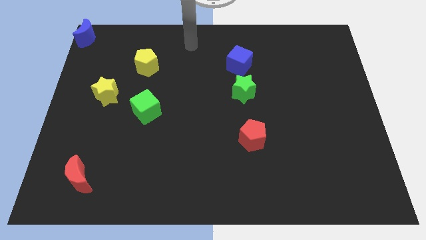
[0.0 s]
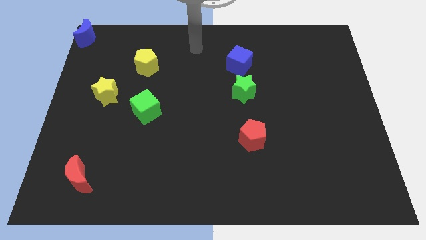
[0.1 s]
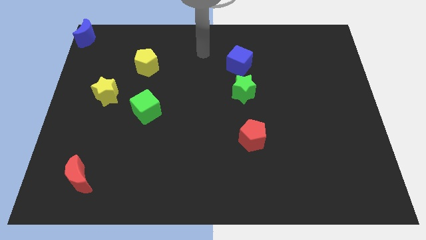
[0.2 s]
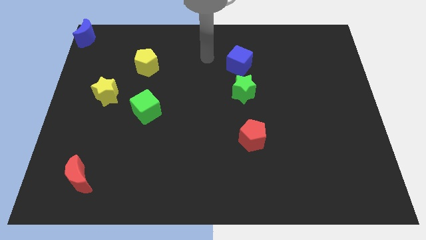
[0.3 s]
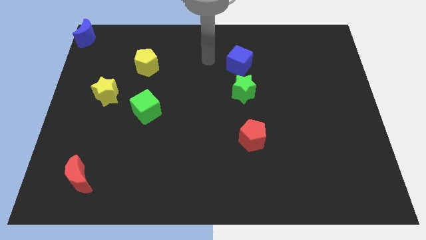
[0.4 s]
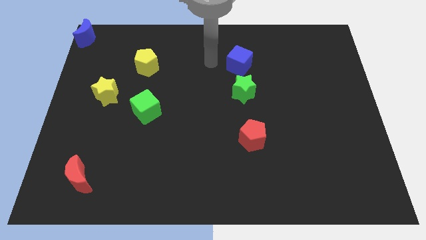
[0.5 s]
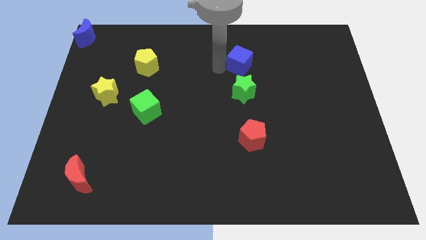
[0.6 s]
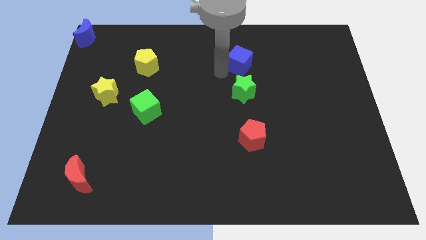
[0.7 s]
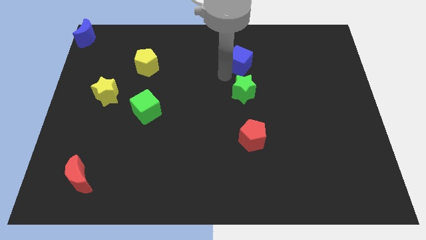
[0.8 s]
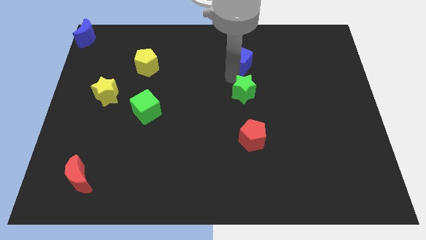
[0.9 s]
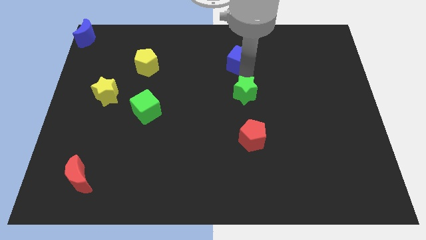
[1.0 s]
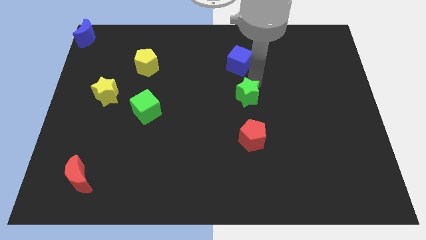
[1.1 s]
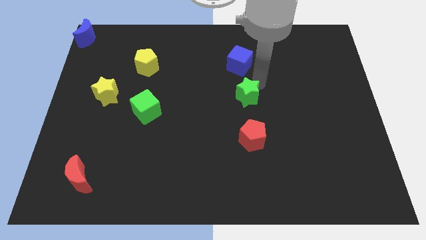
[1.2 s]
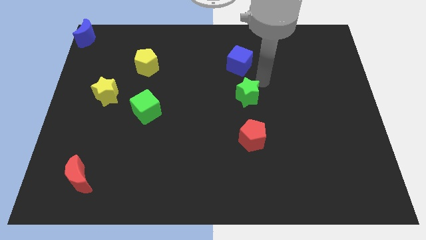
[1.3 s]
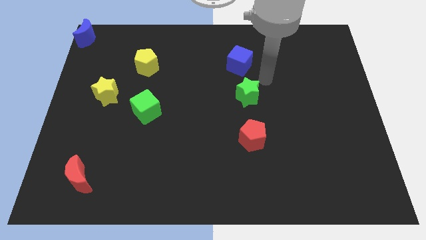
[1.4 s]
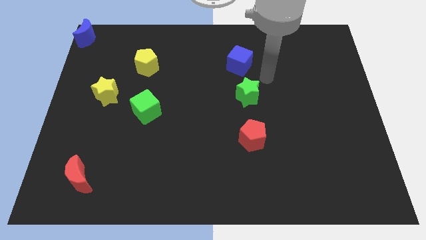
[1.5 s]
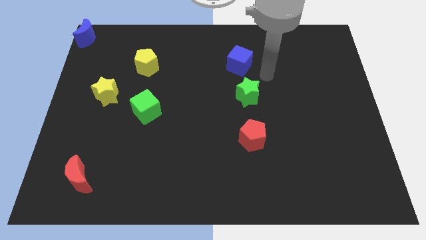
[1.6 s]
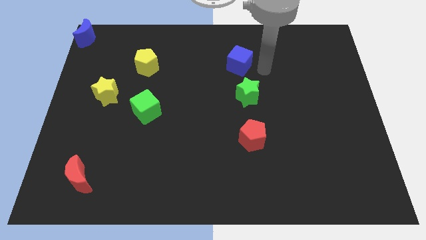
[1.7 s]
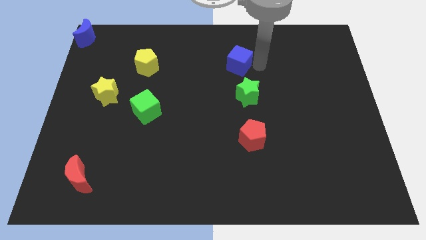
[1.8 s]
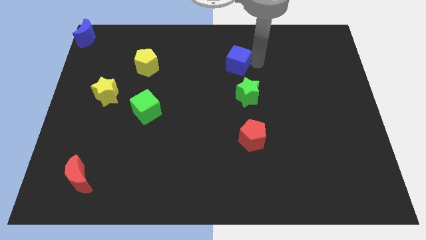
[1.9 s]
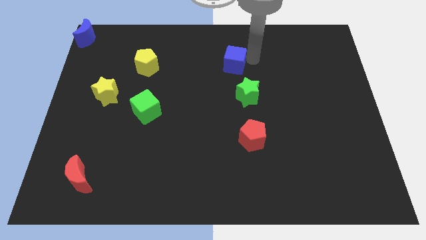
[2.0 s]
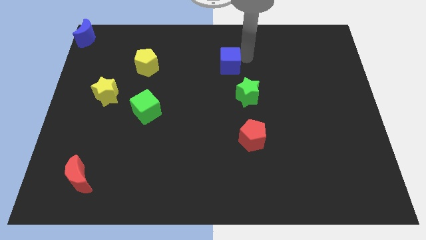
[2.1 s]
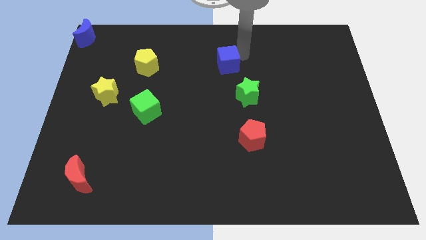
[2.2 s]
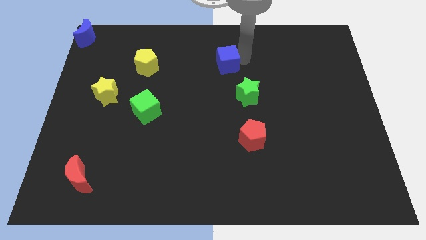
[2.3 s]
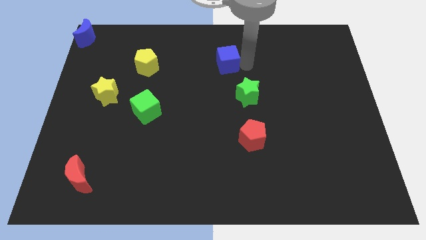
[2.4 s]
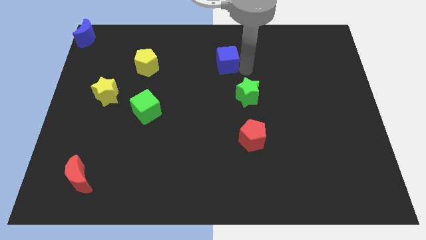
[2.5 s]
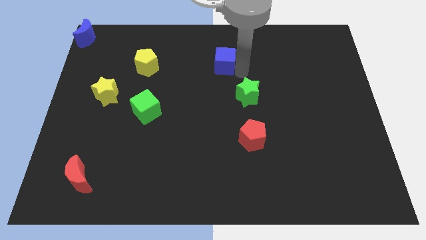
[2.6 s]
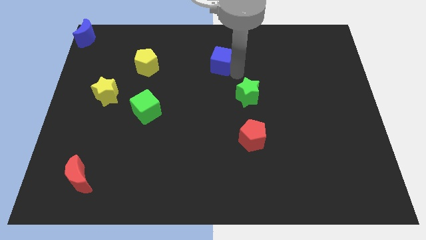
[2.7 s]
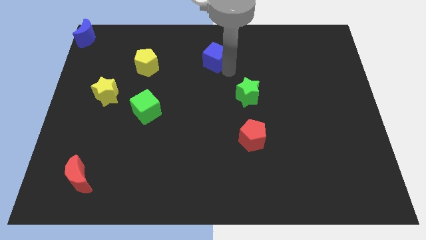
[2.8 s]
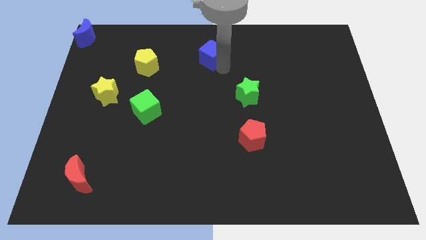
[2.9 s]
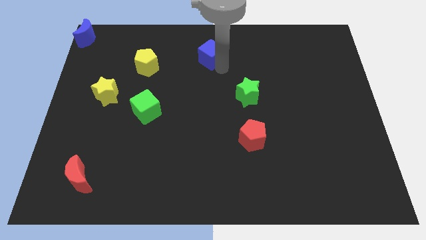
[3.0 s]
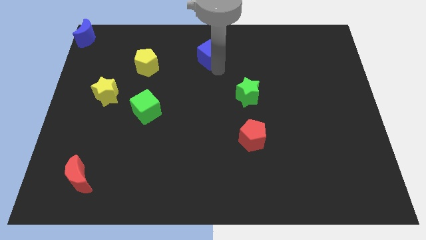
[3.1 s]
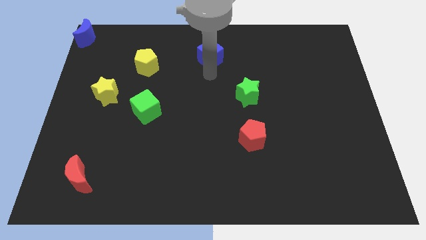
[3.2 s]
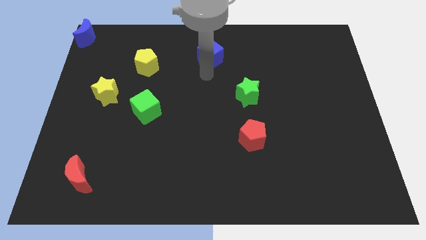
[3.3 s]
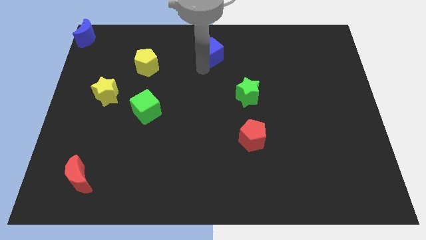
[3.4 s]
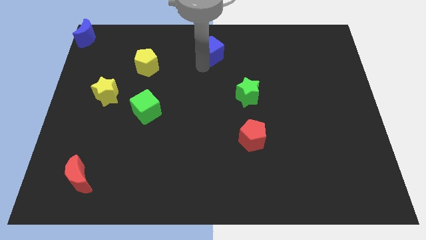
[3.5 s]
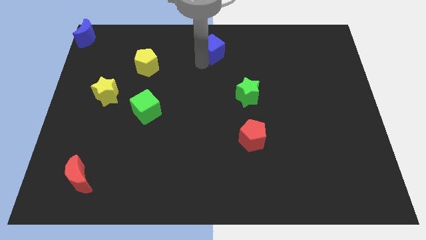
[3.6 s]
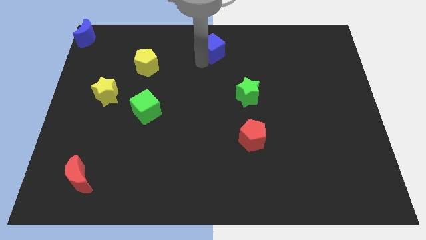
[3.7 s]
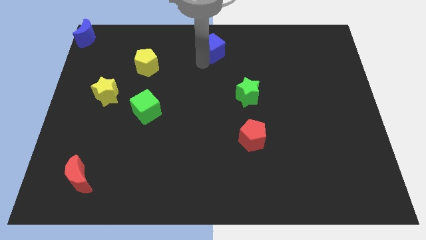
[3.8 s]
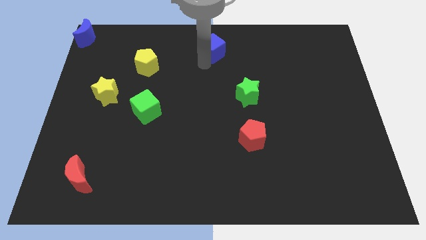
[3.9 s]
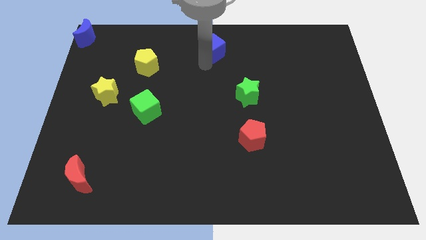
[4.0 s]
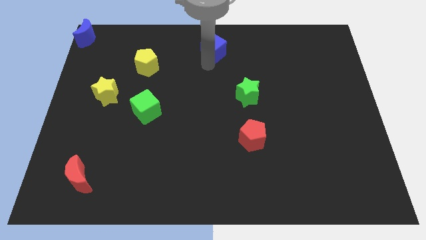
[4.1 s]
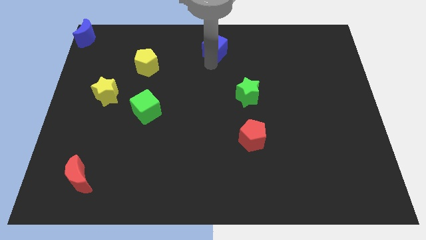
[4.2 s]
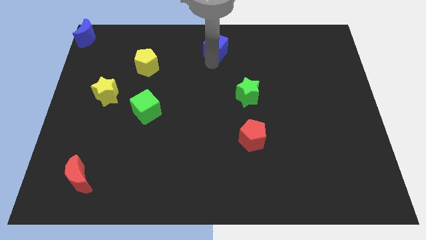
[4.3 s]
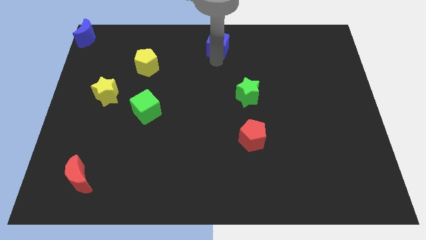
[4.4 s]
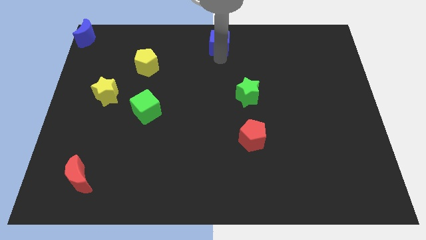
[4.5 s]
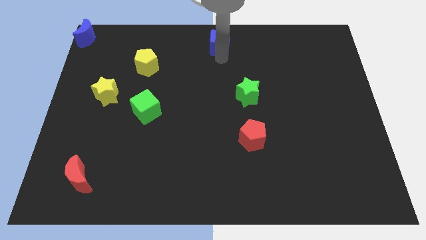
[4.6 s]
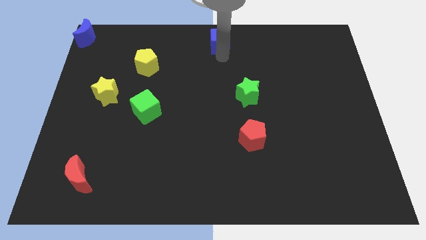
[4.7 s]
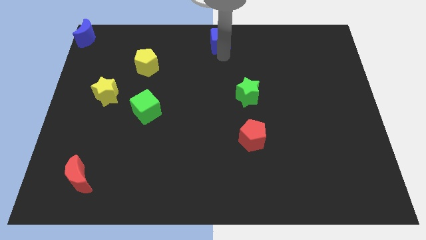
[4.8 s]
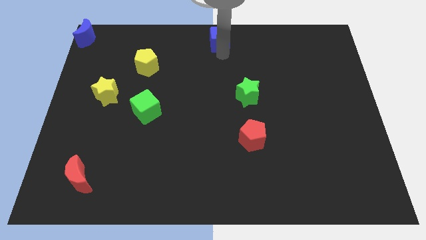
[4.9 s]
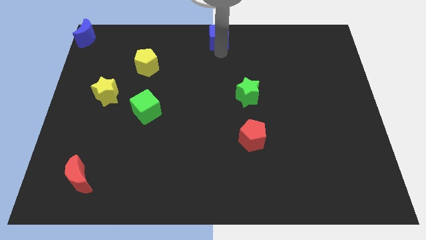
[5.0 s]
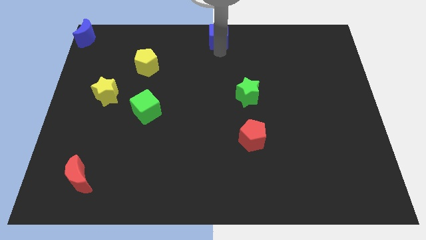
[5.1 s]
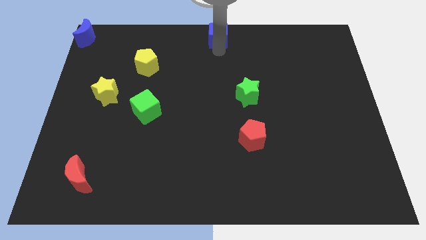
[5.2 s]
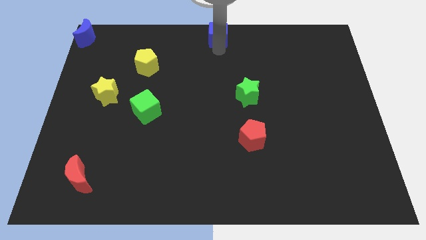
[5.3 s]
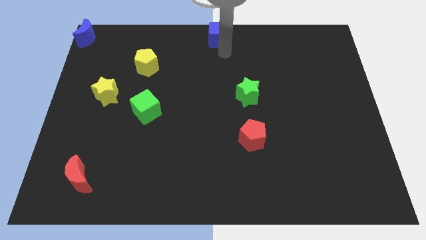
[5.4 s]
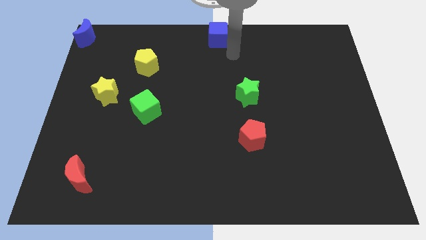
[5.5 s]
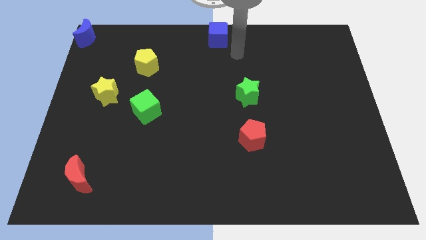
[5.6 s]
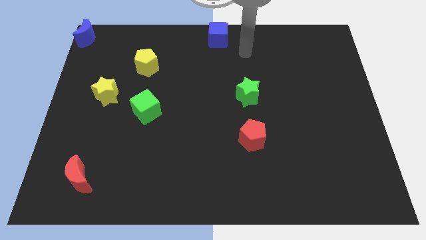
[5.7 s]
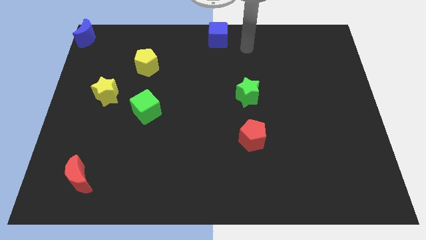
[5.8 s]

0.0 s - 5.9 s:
move the blue cube to the top middle of the board

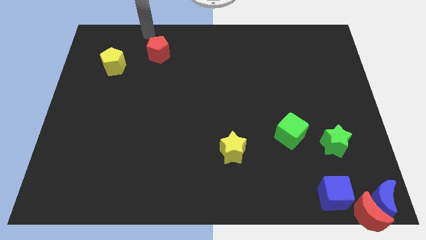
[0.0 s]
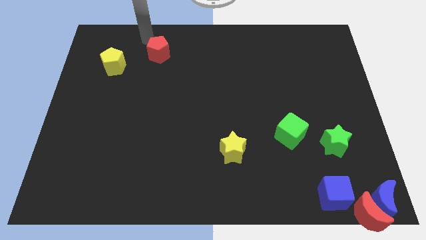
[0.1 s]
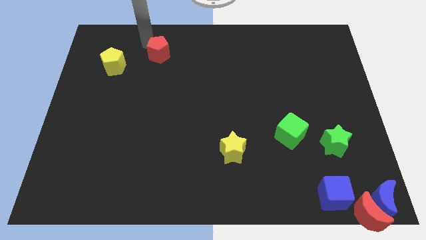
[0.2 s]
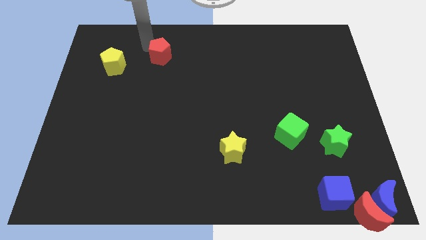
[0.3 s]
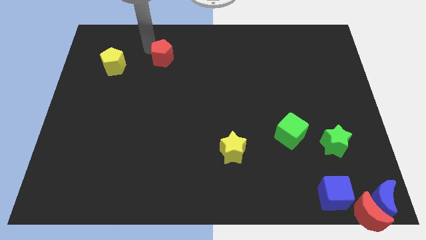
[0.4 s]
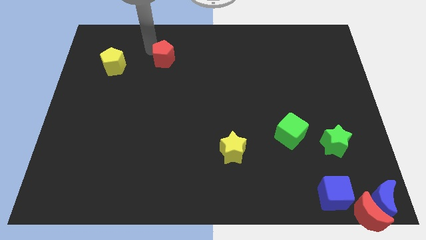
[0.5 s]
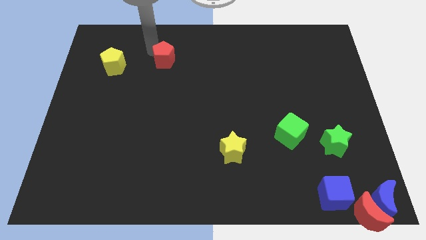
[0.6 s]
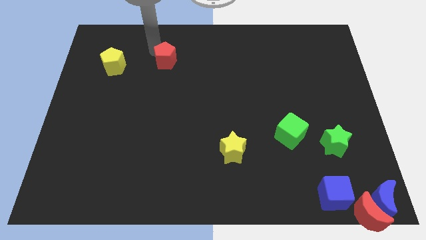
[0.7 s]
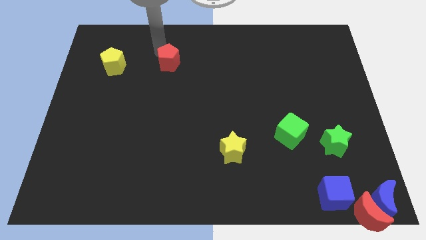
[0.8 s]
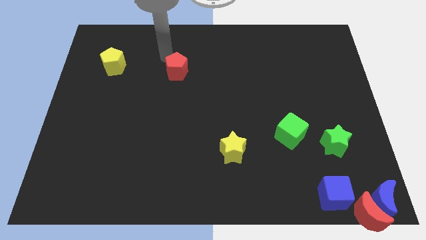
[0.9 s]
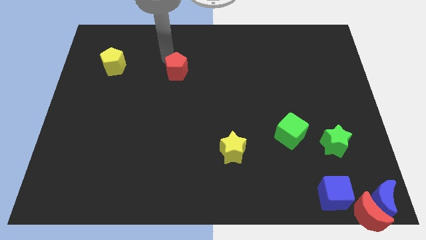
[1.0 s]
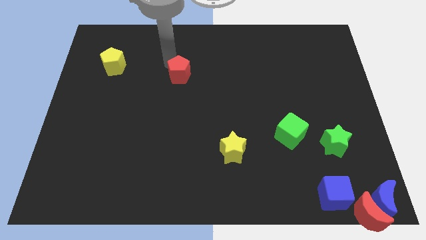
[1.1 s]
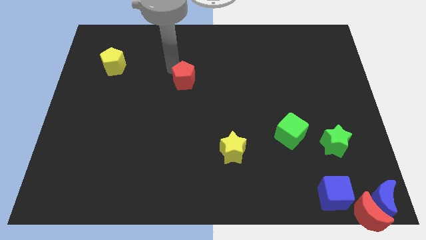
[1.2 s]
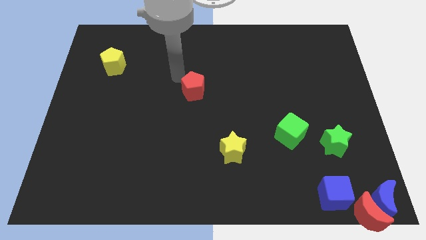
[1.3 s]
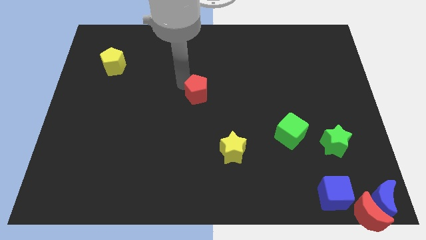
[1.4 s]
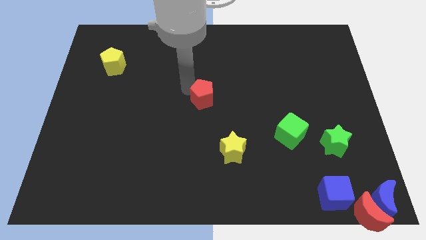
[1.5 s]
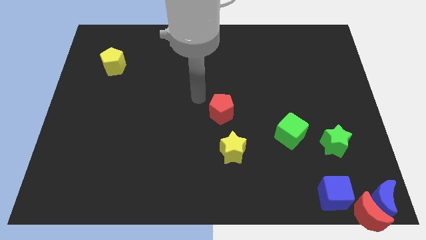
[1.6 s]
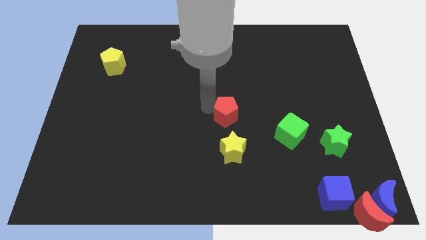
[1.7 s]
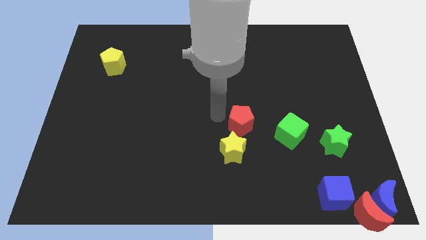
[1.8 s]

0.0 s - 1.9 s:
push the red pentagon to the top of the yellow star

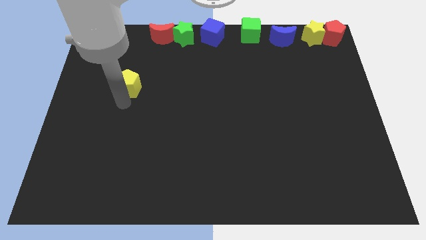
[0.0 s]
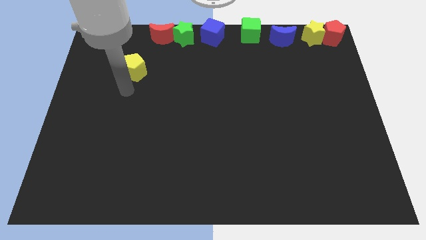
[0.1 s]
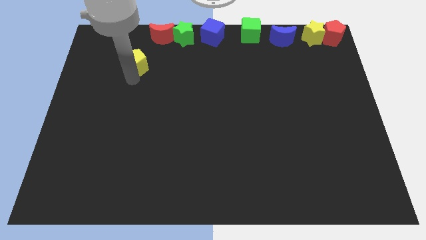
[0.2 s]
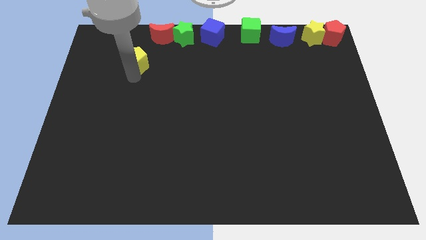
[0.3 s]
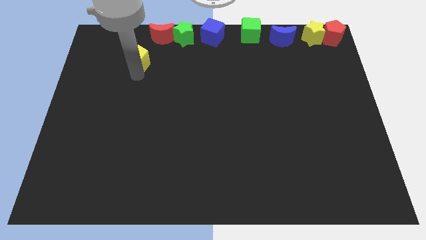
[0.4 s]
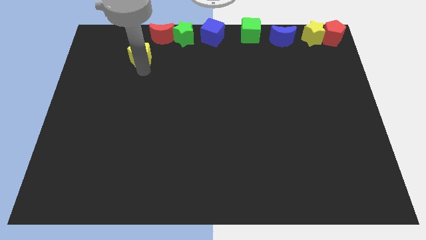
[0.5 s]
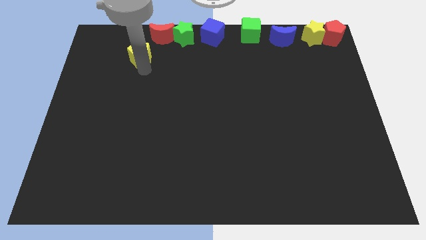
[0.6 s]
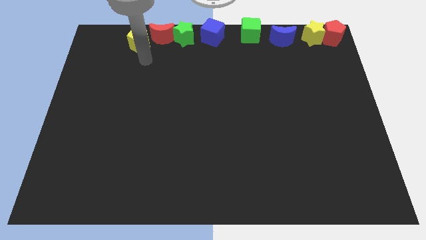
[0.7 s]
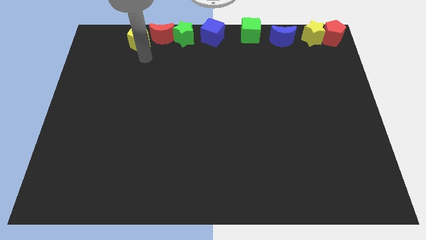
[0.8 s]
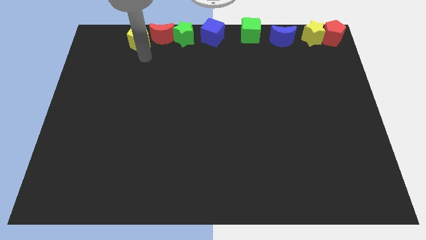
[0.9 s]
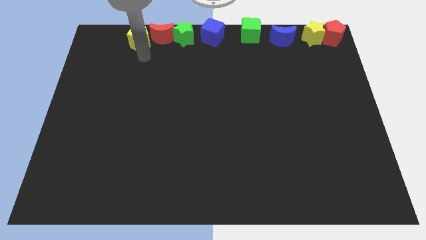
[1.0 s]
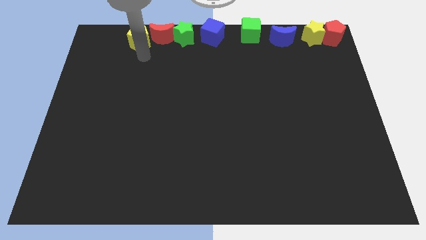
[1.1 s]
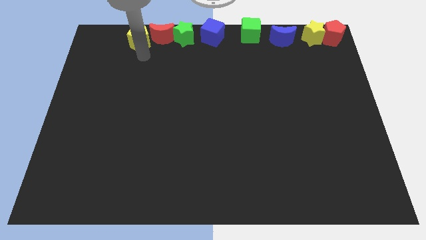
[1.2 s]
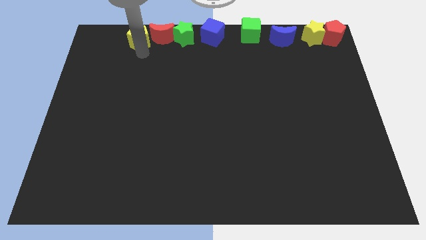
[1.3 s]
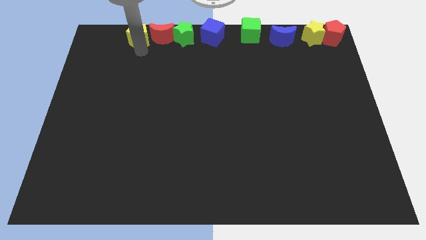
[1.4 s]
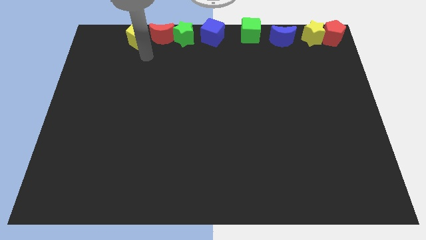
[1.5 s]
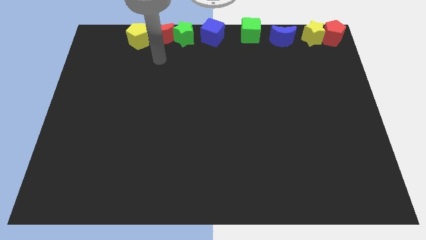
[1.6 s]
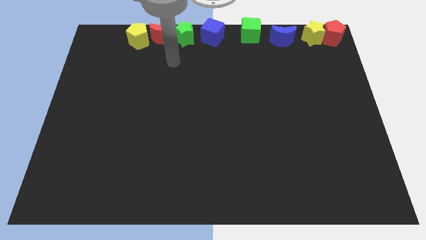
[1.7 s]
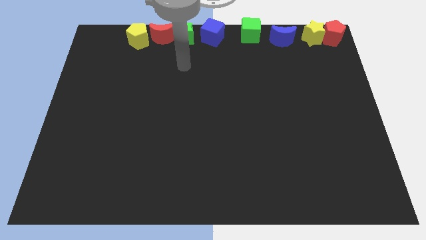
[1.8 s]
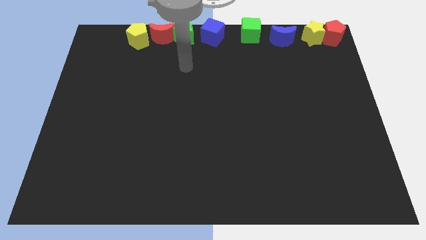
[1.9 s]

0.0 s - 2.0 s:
move the yellow pentagon to the left of the red moon
